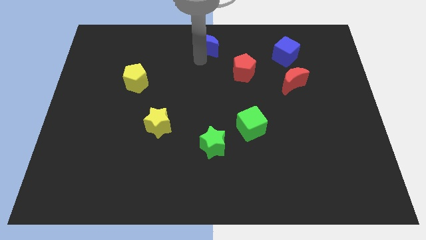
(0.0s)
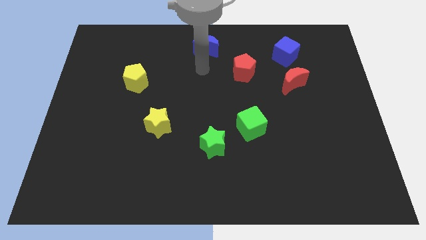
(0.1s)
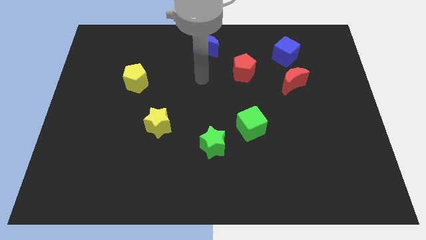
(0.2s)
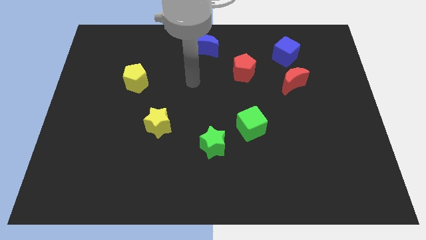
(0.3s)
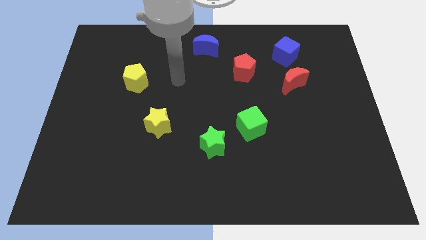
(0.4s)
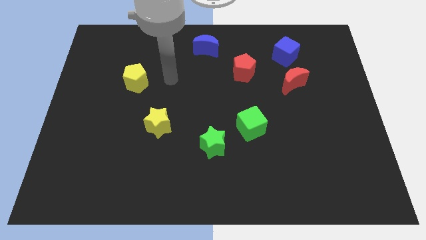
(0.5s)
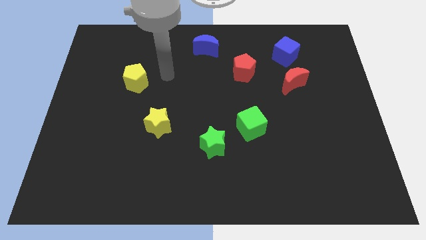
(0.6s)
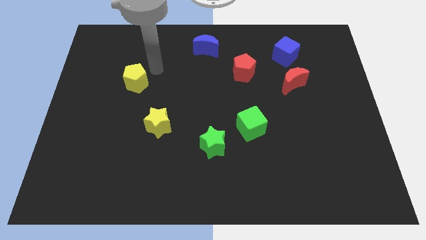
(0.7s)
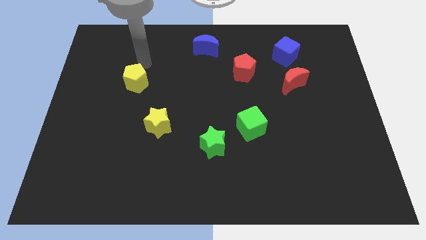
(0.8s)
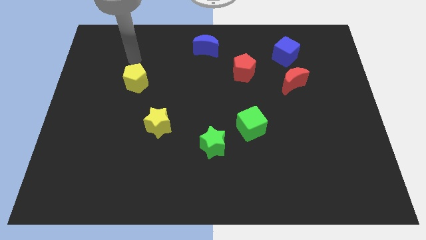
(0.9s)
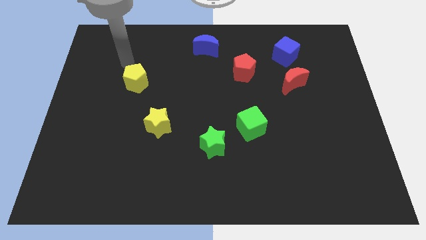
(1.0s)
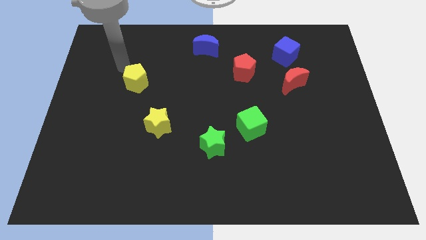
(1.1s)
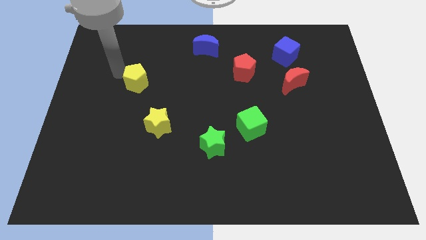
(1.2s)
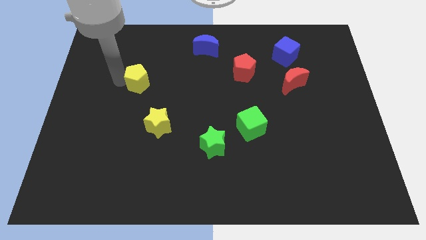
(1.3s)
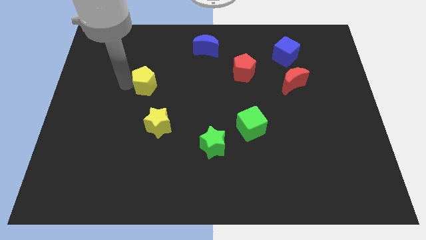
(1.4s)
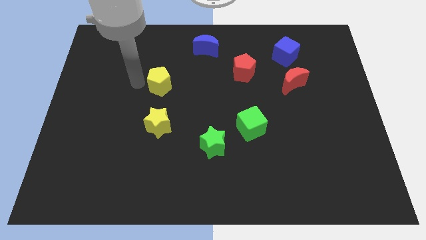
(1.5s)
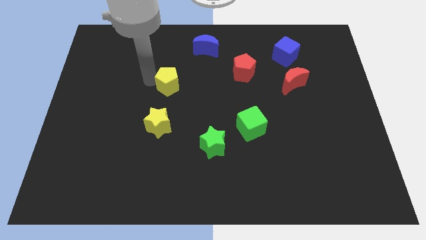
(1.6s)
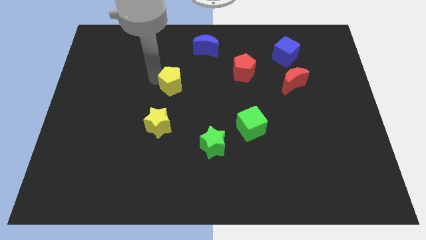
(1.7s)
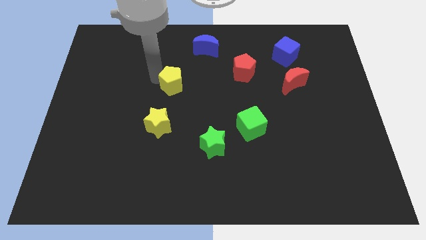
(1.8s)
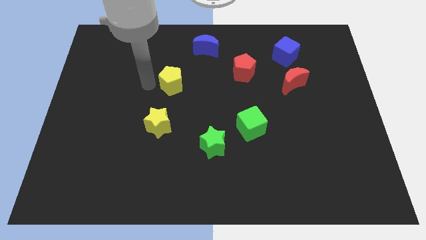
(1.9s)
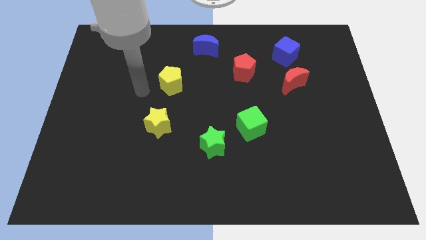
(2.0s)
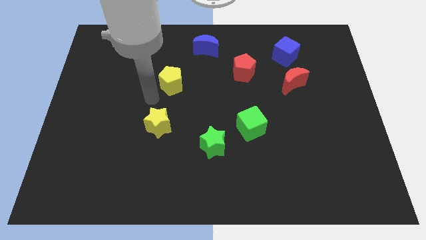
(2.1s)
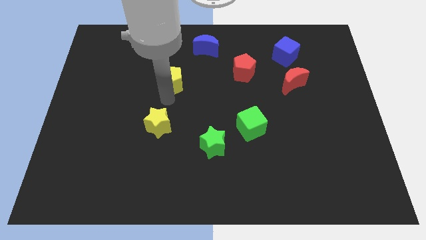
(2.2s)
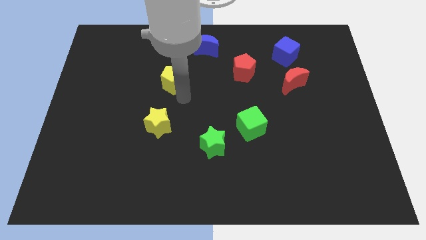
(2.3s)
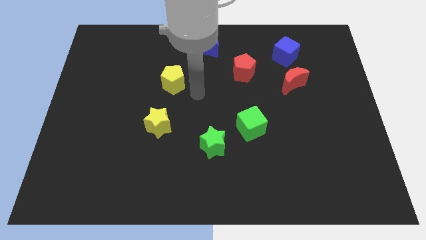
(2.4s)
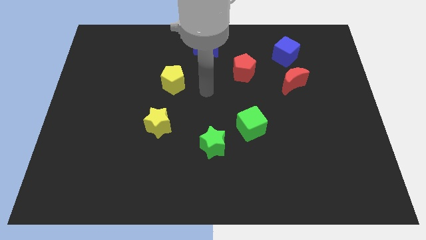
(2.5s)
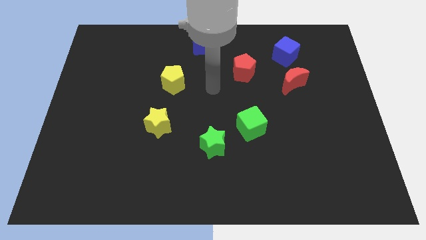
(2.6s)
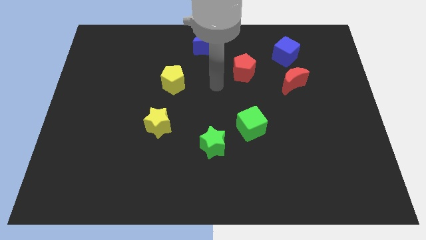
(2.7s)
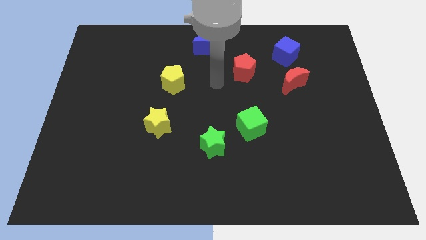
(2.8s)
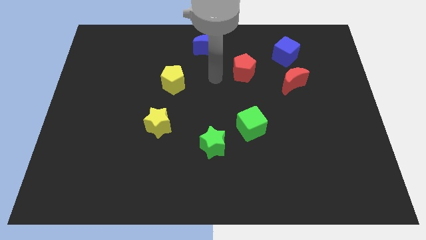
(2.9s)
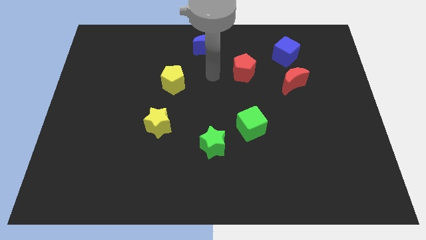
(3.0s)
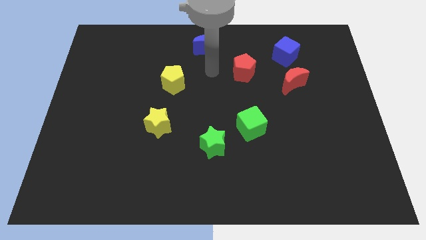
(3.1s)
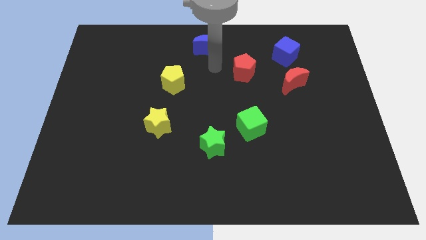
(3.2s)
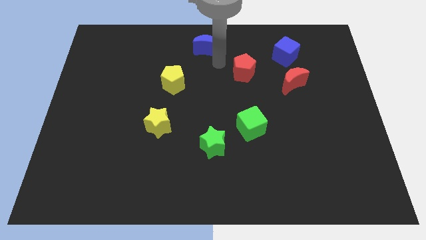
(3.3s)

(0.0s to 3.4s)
push the yellow pentagon to the center

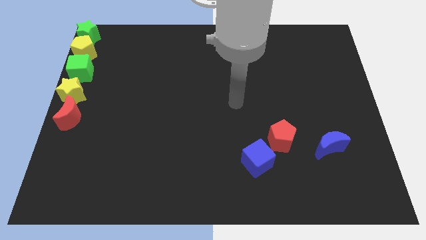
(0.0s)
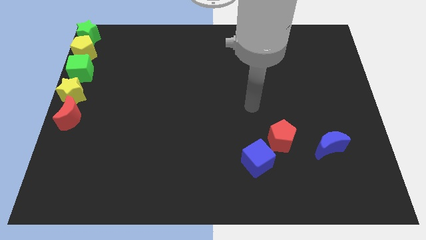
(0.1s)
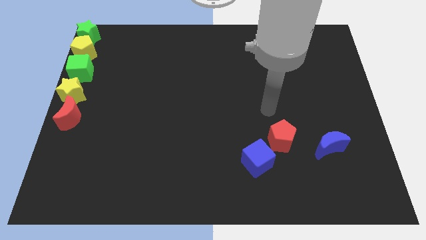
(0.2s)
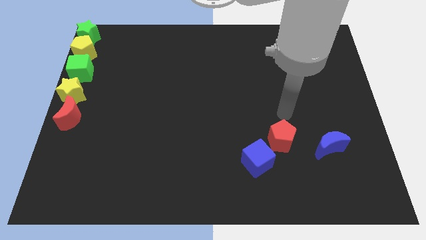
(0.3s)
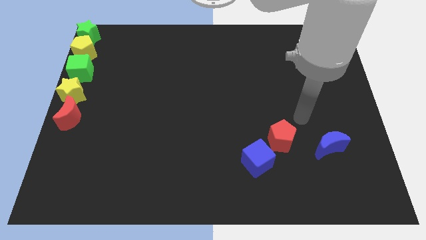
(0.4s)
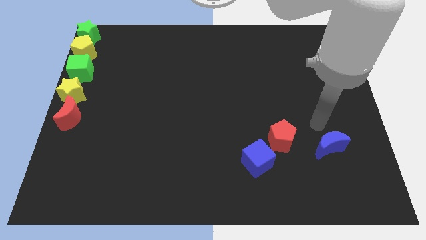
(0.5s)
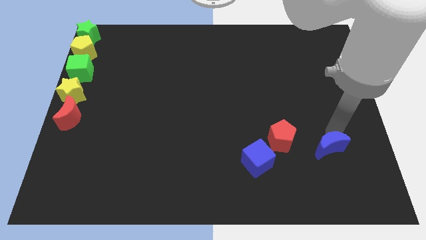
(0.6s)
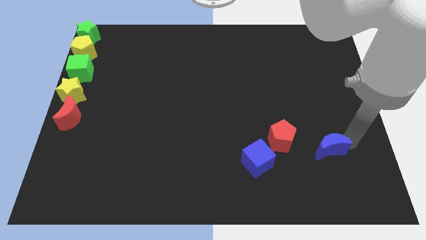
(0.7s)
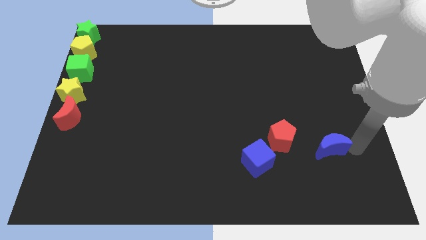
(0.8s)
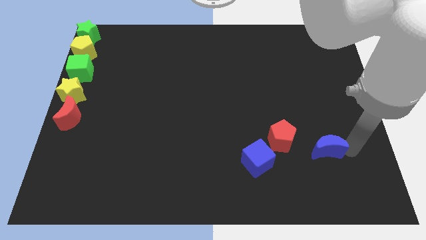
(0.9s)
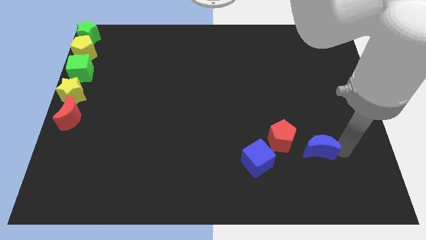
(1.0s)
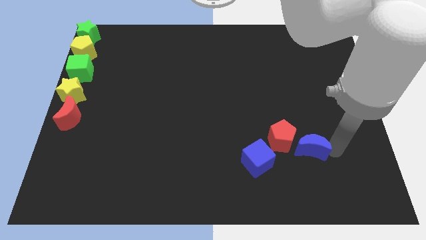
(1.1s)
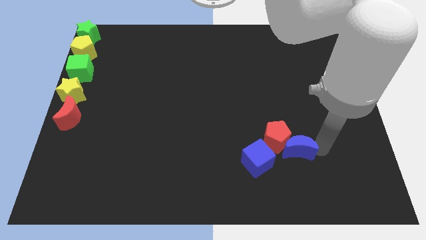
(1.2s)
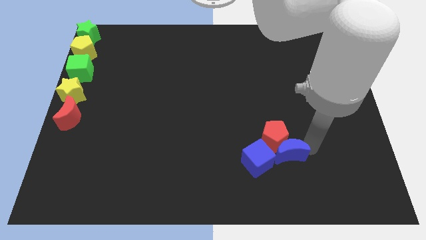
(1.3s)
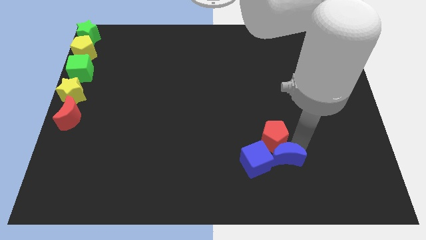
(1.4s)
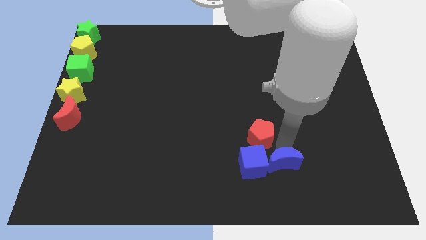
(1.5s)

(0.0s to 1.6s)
add blue moon to blue cube and red pentagon

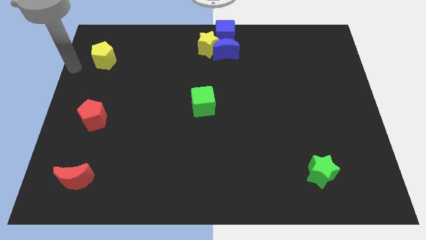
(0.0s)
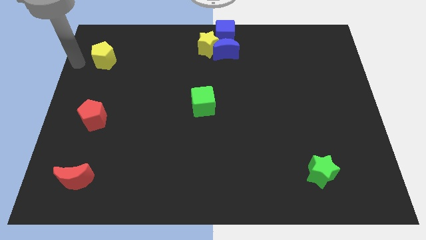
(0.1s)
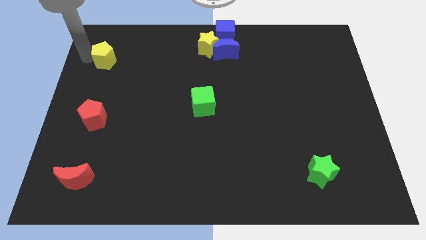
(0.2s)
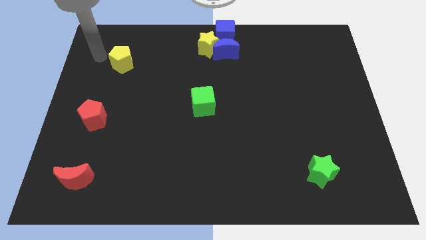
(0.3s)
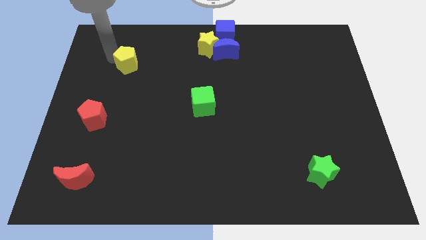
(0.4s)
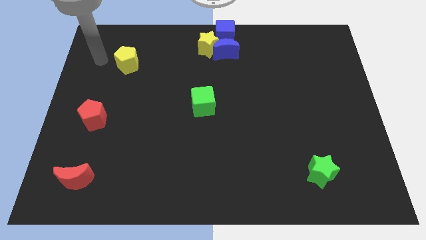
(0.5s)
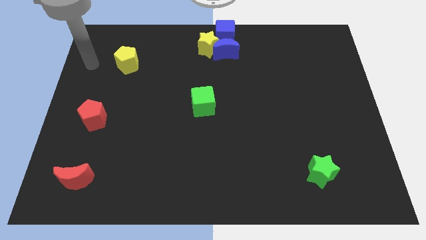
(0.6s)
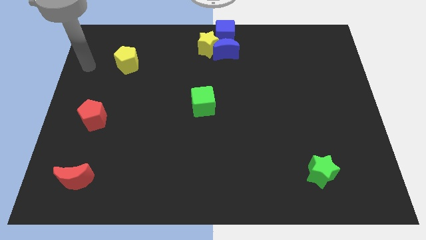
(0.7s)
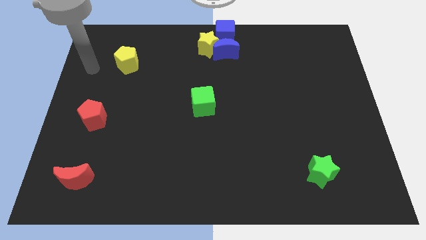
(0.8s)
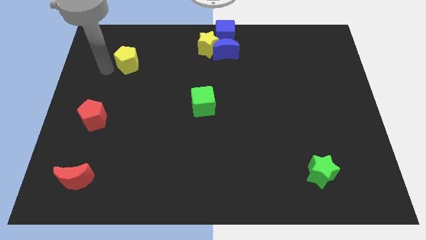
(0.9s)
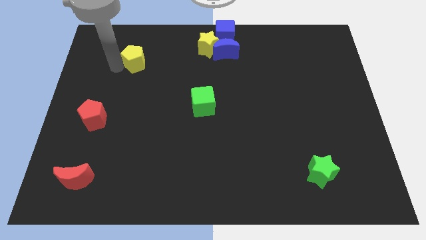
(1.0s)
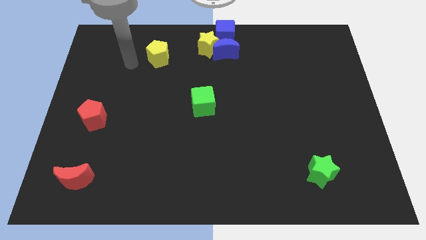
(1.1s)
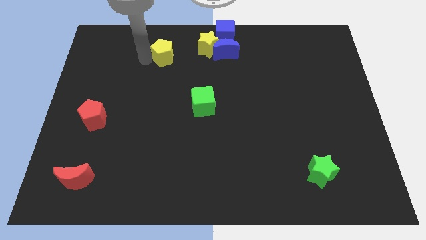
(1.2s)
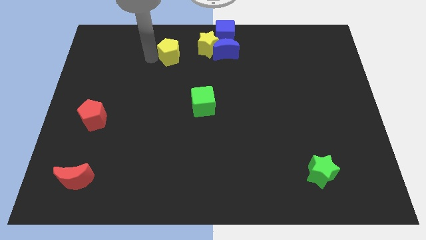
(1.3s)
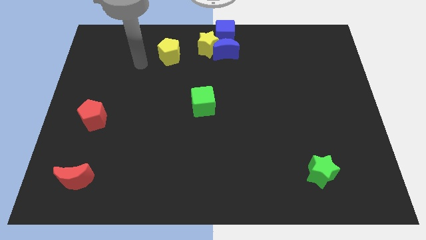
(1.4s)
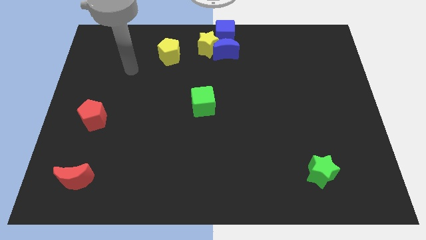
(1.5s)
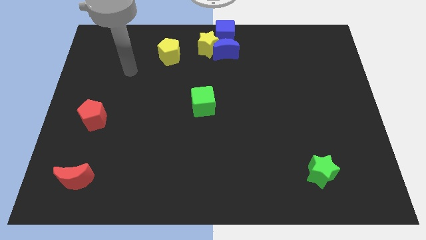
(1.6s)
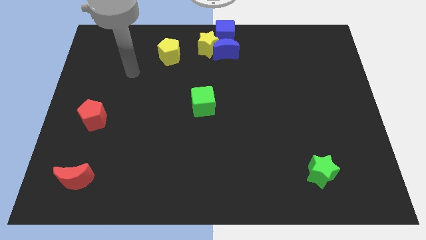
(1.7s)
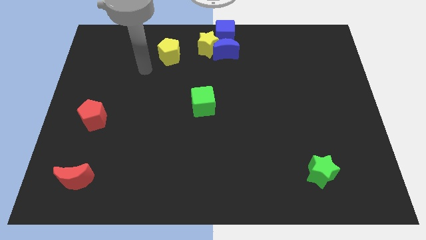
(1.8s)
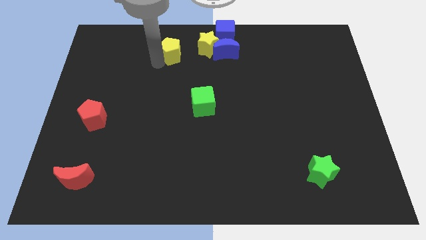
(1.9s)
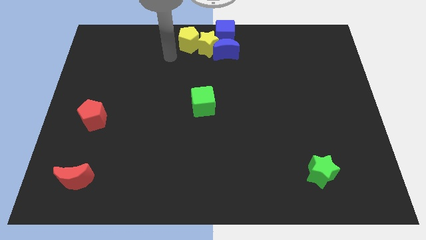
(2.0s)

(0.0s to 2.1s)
slide the yellow pentagon towards the left side of the yellow star

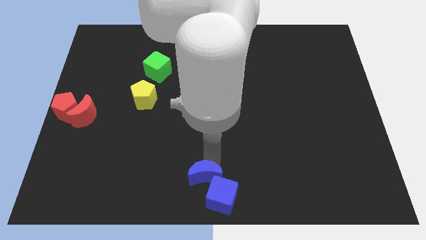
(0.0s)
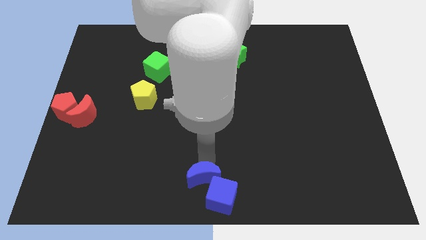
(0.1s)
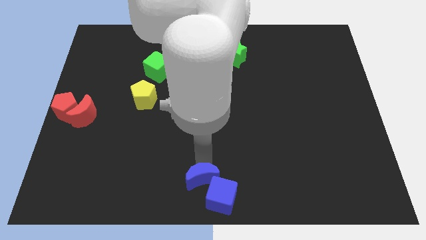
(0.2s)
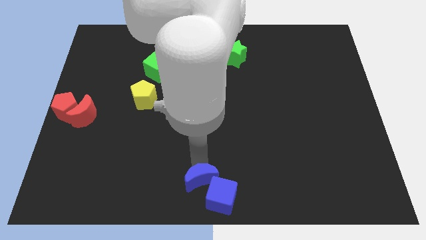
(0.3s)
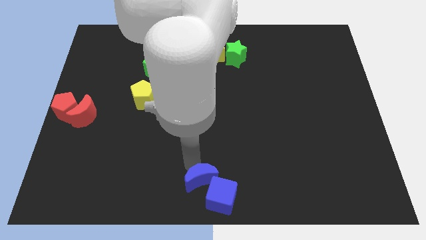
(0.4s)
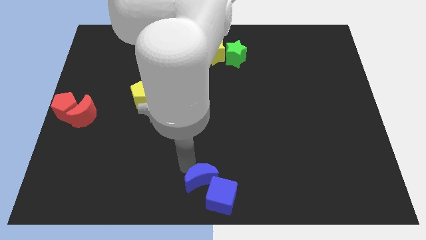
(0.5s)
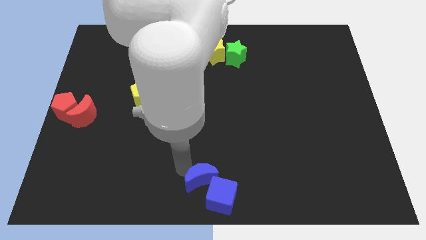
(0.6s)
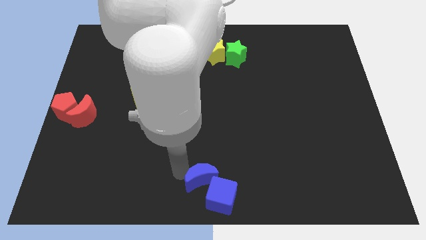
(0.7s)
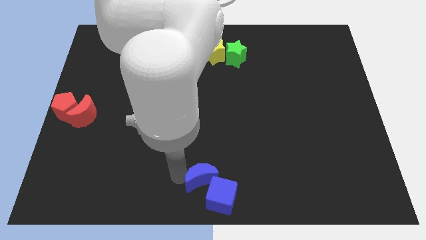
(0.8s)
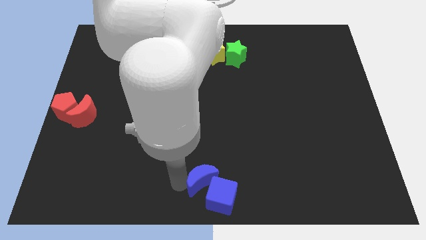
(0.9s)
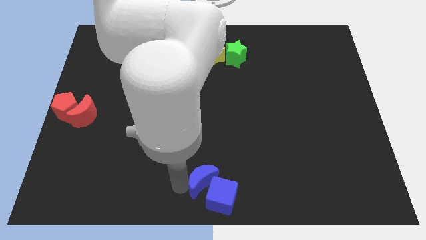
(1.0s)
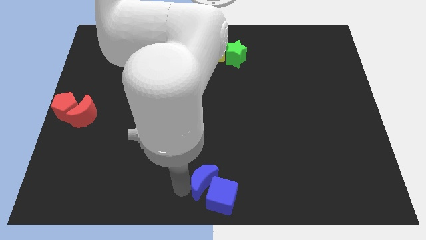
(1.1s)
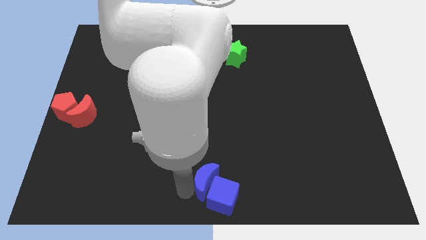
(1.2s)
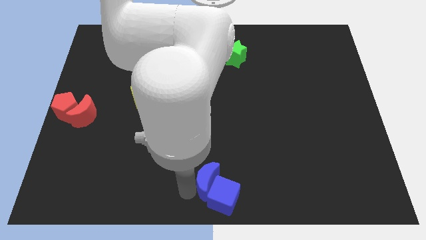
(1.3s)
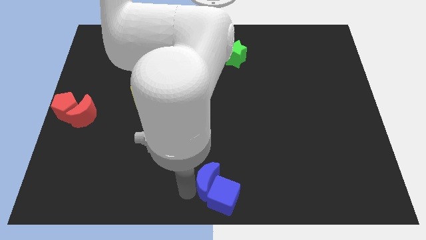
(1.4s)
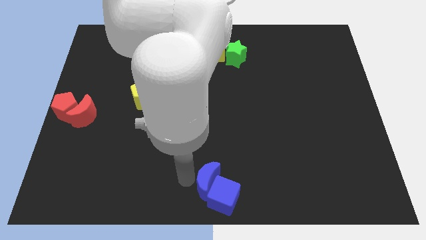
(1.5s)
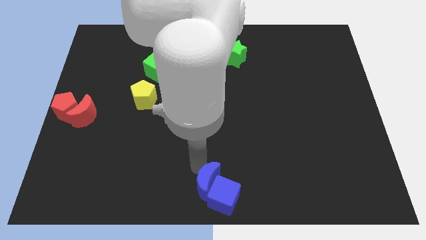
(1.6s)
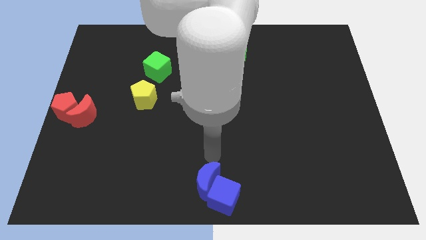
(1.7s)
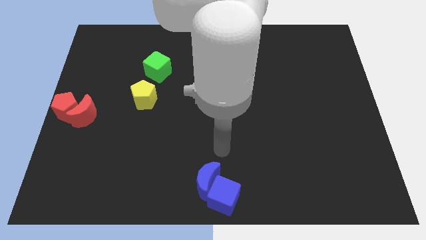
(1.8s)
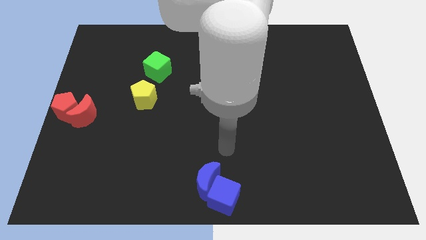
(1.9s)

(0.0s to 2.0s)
place the blue crescent left to the blue cube

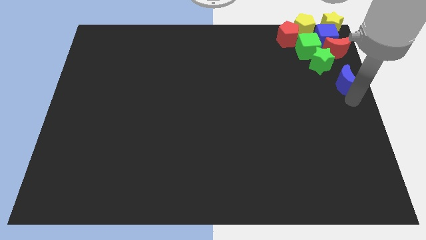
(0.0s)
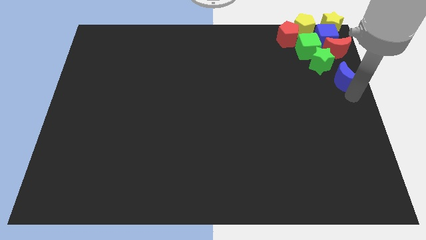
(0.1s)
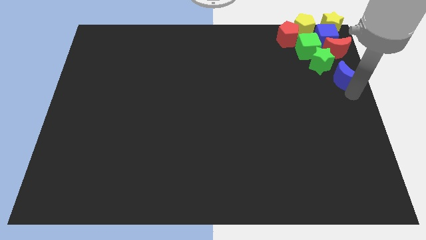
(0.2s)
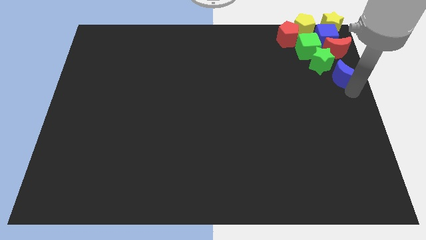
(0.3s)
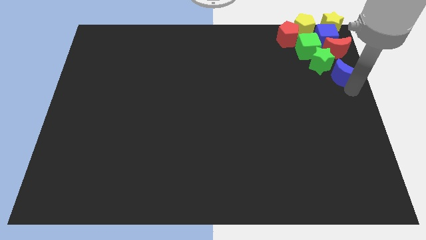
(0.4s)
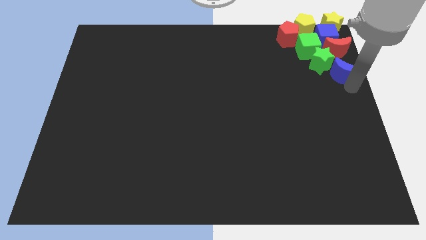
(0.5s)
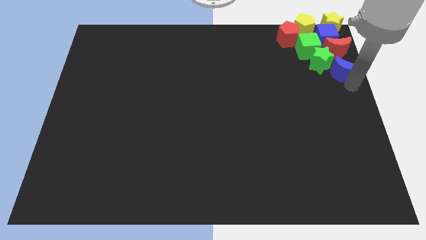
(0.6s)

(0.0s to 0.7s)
place the blue cube at the bottom right side of green star
